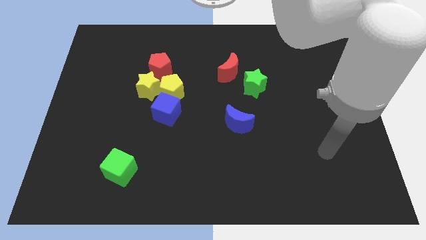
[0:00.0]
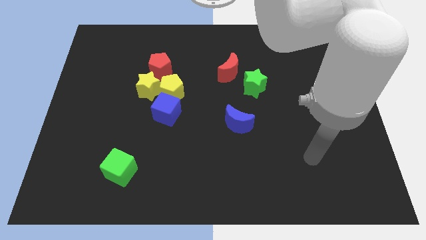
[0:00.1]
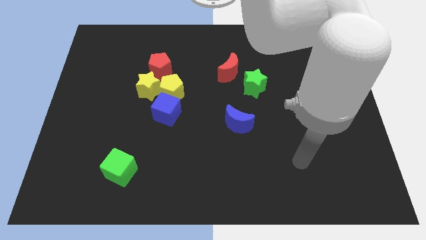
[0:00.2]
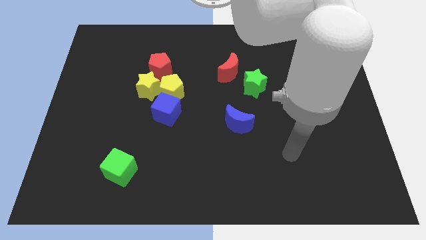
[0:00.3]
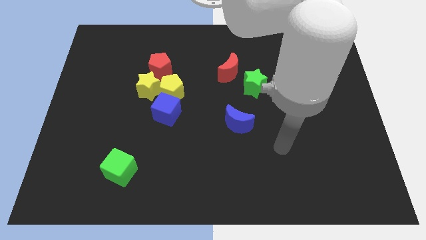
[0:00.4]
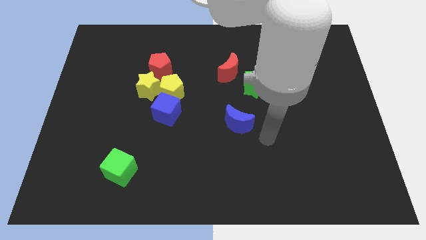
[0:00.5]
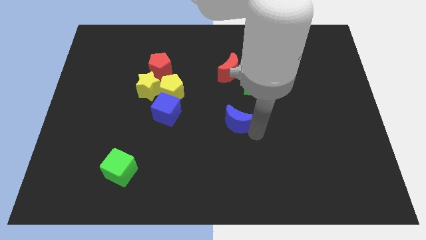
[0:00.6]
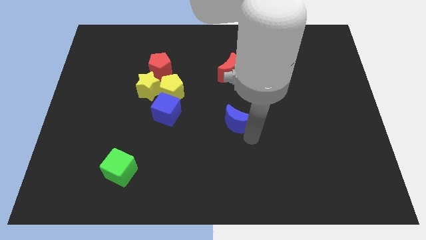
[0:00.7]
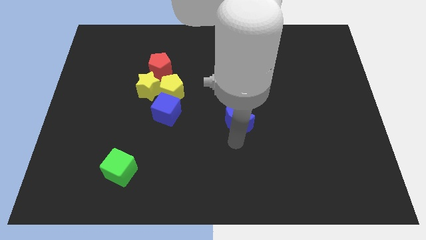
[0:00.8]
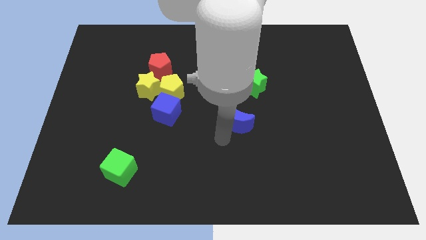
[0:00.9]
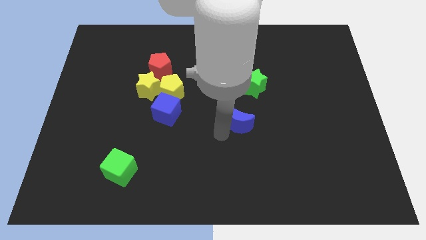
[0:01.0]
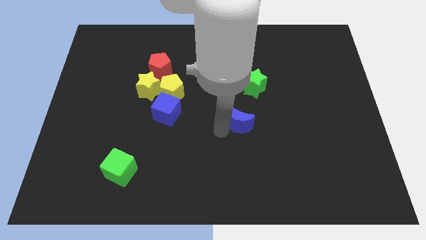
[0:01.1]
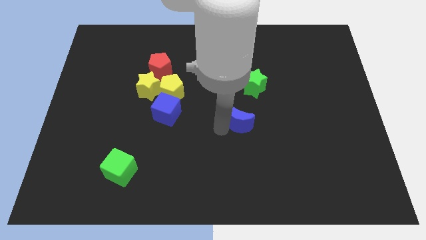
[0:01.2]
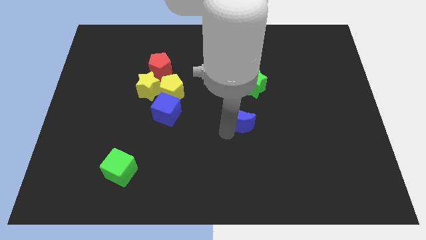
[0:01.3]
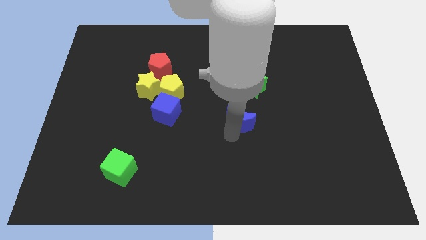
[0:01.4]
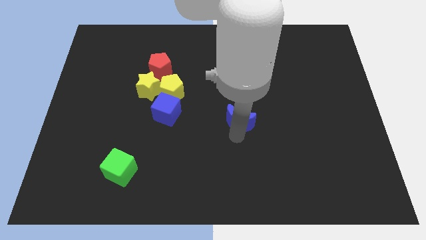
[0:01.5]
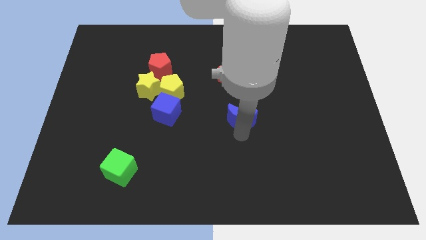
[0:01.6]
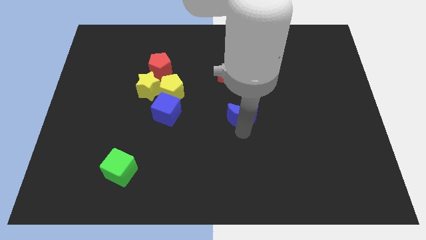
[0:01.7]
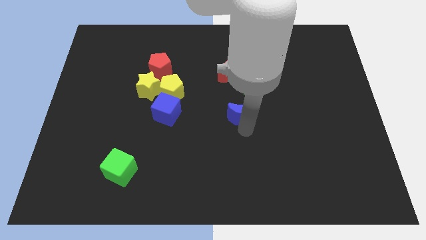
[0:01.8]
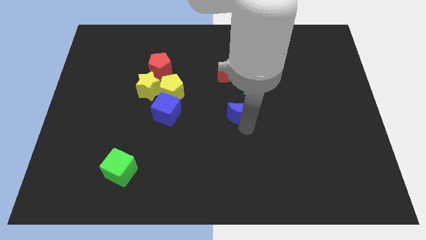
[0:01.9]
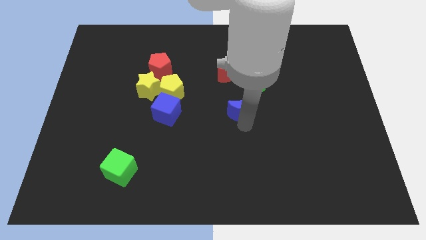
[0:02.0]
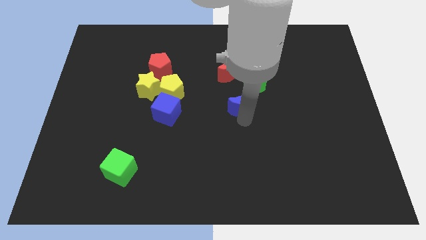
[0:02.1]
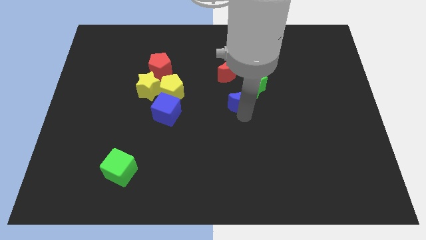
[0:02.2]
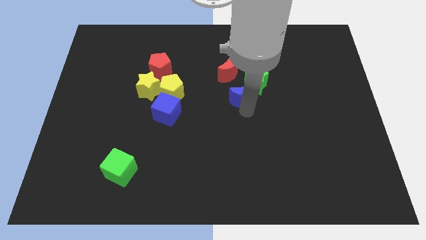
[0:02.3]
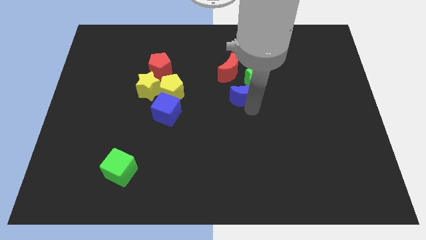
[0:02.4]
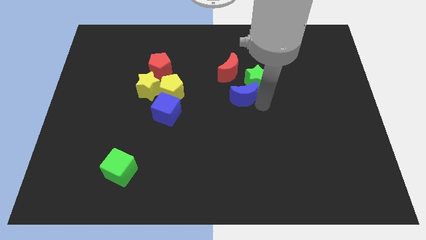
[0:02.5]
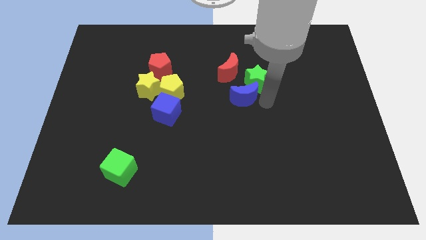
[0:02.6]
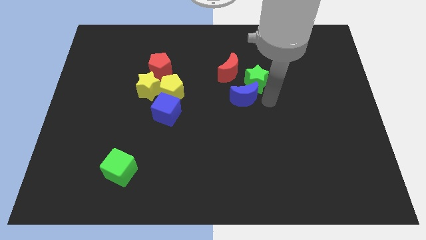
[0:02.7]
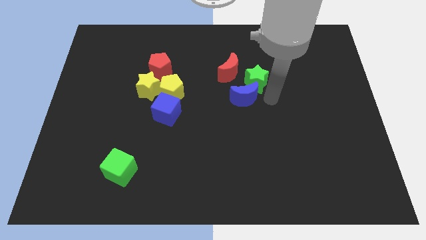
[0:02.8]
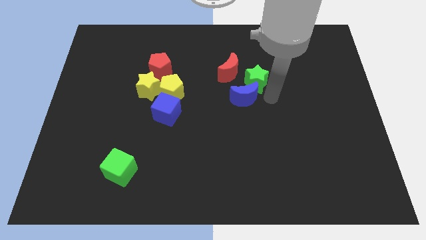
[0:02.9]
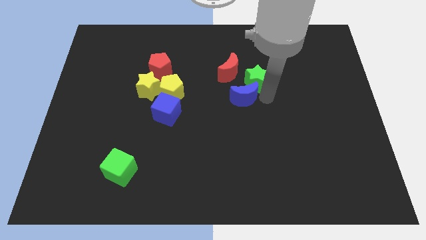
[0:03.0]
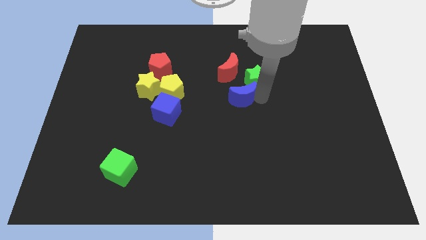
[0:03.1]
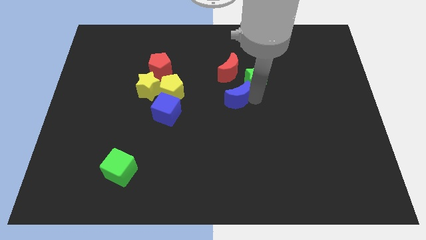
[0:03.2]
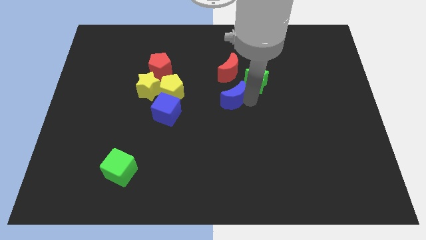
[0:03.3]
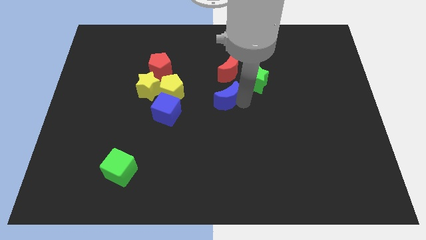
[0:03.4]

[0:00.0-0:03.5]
push blue moon near green star

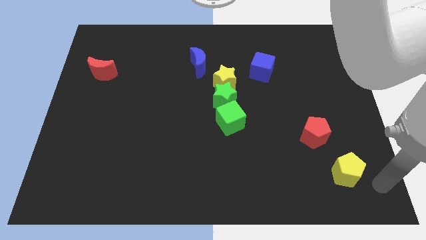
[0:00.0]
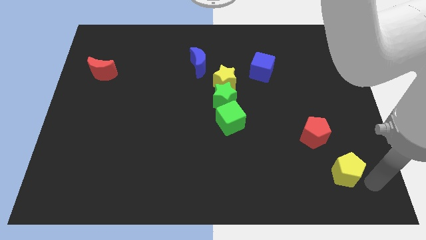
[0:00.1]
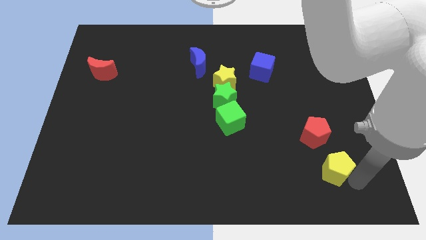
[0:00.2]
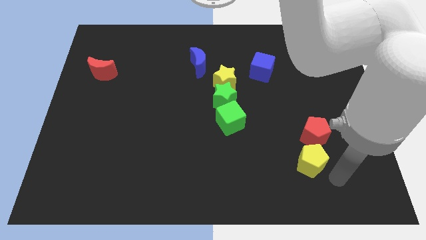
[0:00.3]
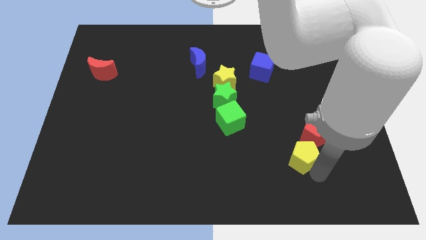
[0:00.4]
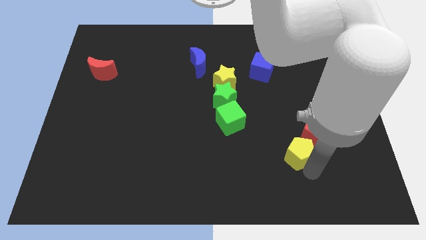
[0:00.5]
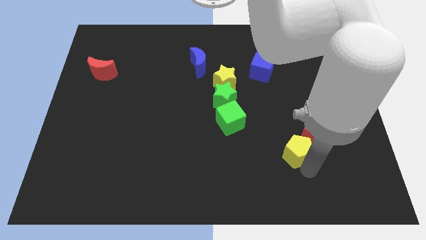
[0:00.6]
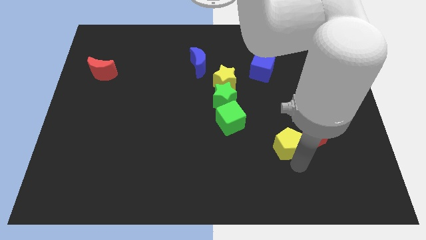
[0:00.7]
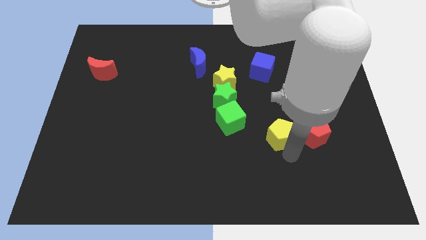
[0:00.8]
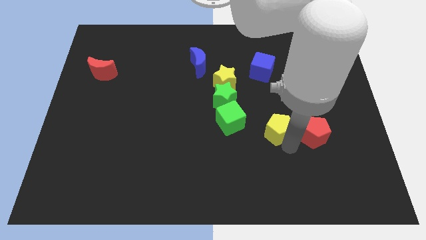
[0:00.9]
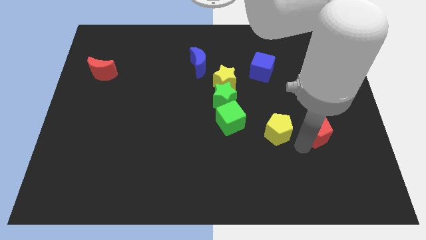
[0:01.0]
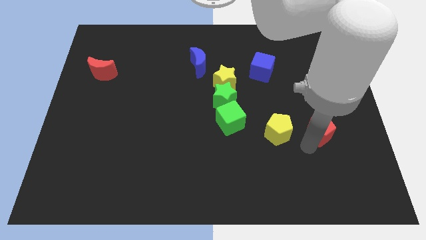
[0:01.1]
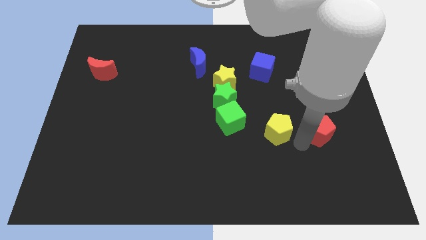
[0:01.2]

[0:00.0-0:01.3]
place the yellow pentagon in between the green cube and the red pentagon

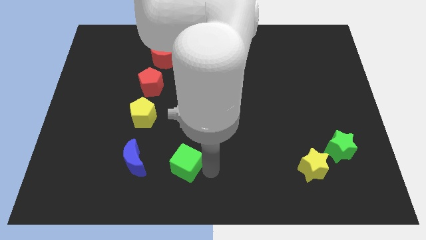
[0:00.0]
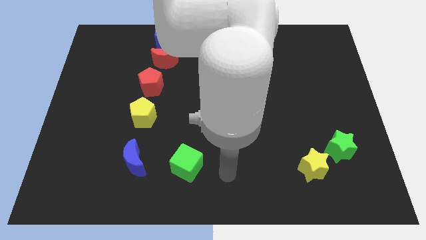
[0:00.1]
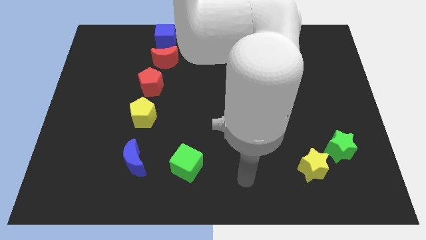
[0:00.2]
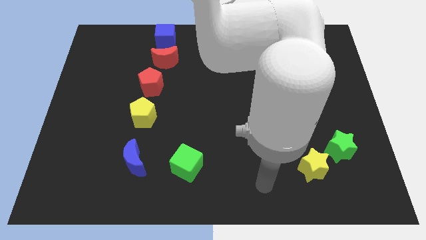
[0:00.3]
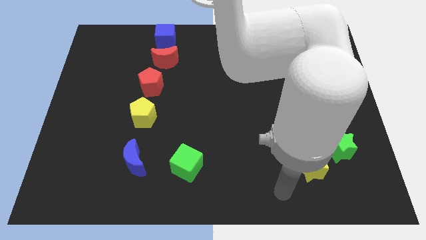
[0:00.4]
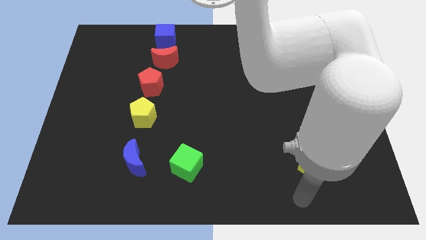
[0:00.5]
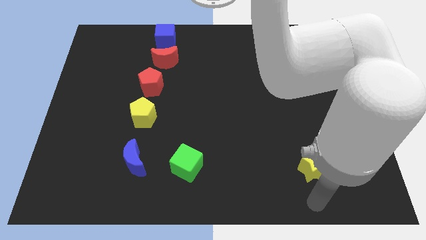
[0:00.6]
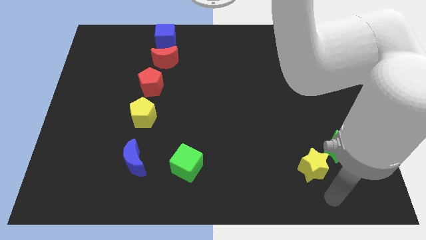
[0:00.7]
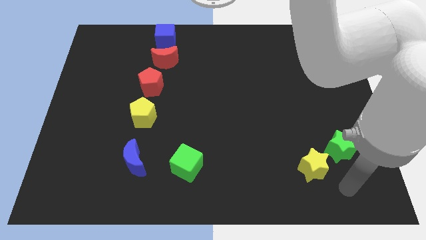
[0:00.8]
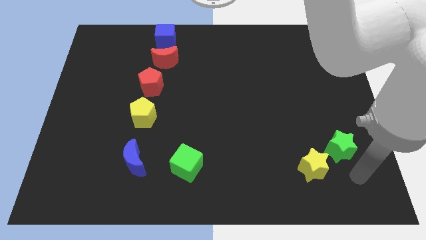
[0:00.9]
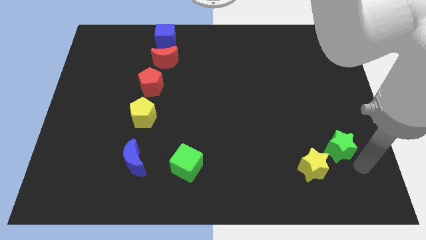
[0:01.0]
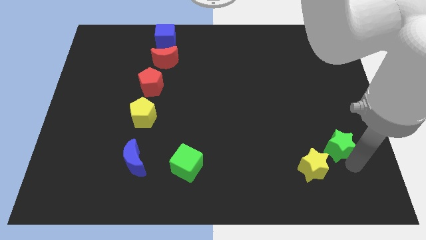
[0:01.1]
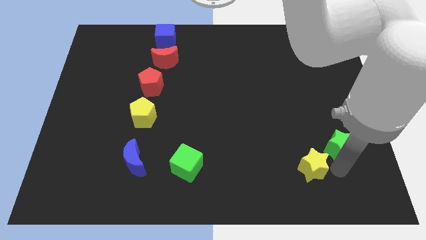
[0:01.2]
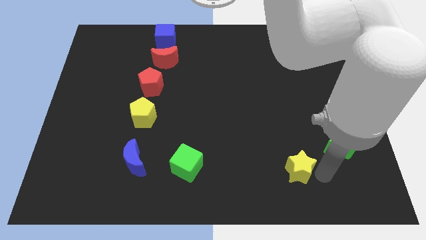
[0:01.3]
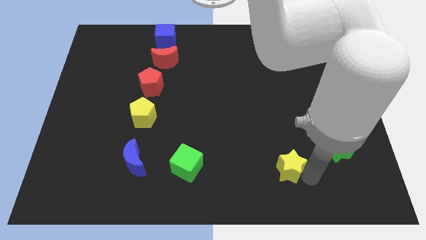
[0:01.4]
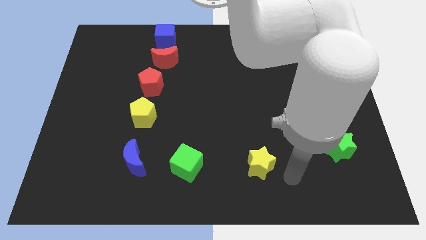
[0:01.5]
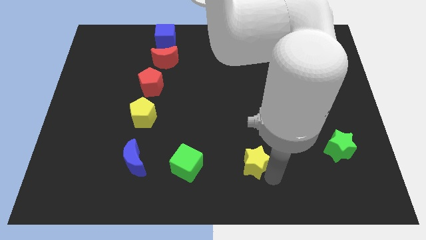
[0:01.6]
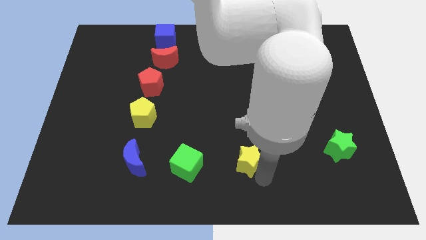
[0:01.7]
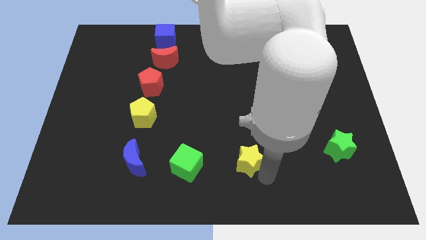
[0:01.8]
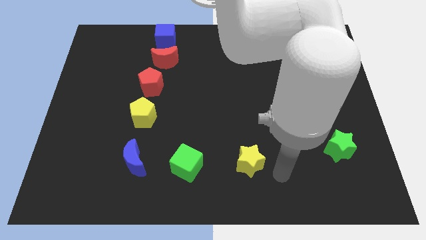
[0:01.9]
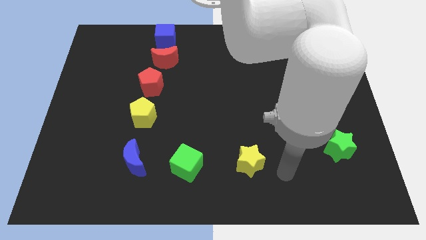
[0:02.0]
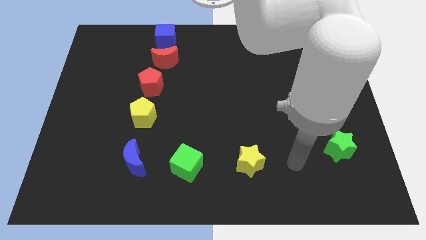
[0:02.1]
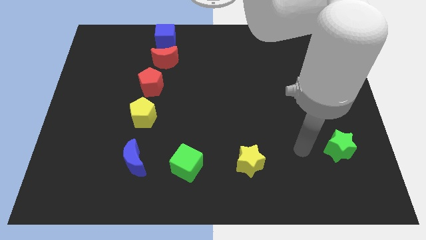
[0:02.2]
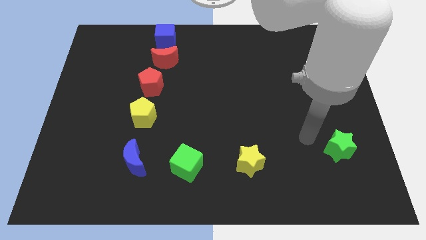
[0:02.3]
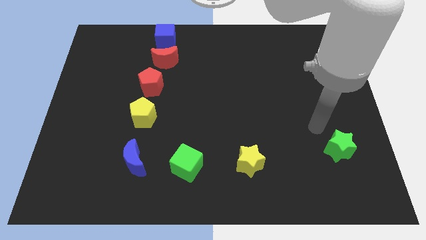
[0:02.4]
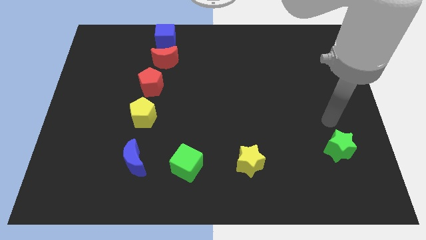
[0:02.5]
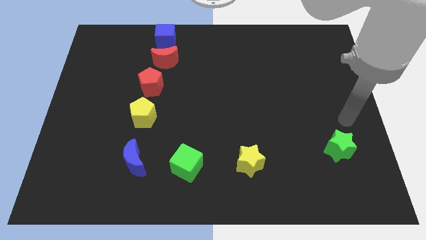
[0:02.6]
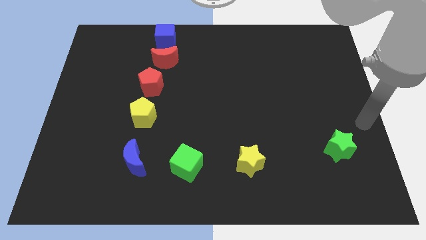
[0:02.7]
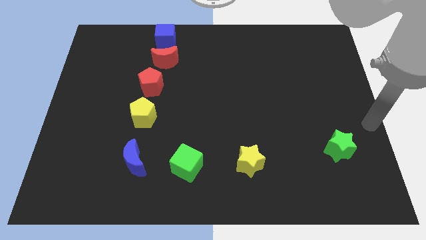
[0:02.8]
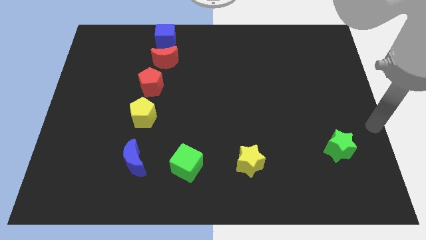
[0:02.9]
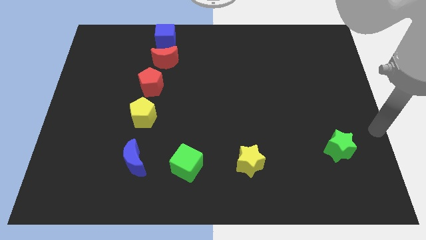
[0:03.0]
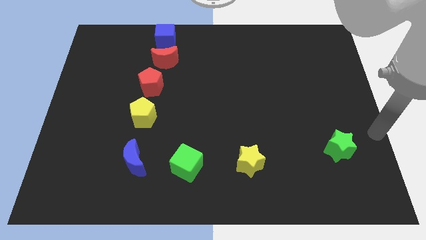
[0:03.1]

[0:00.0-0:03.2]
move the yellow star to the right side of the green cube

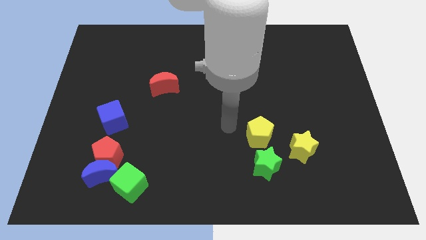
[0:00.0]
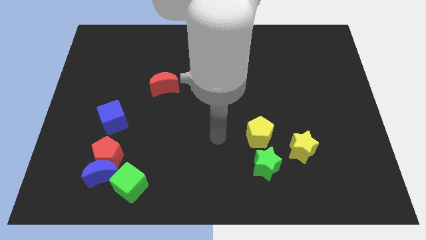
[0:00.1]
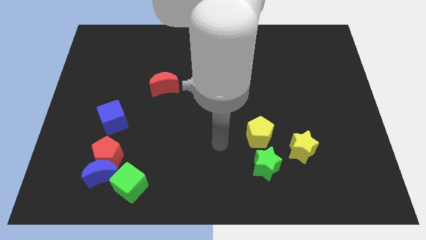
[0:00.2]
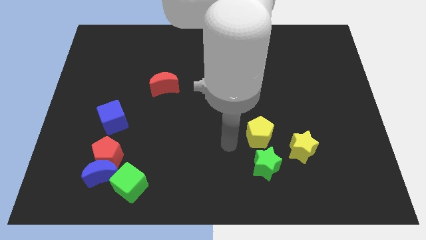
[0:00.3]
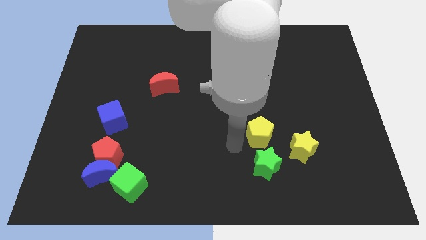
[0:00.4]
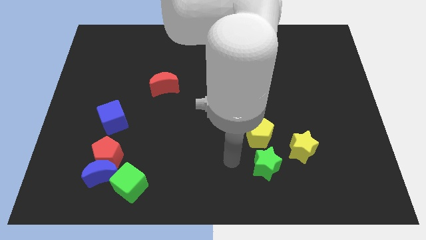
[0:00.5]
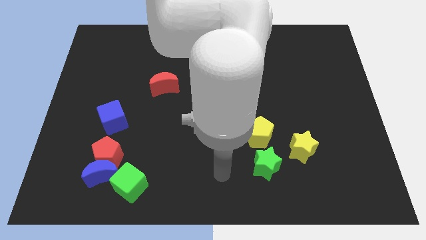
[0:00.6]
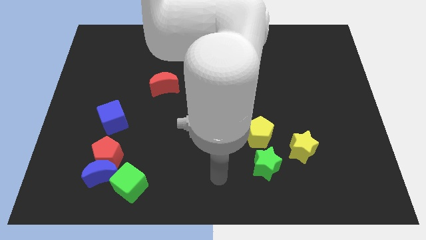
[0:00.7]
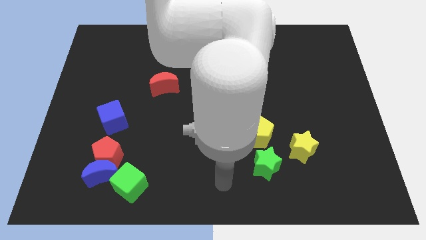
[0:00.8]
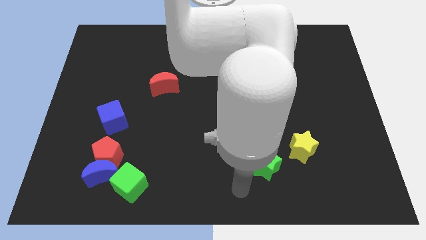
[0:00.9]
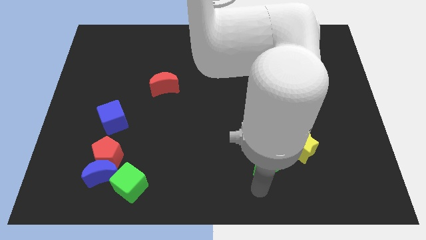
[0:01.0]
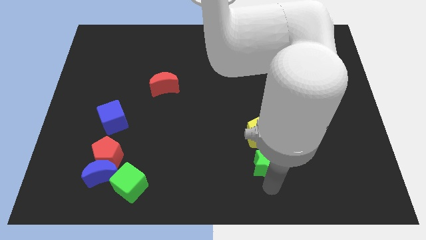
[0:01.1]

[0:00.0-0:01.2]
point your arm at the bottom side of the green star
